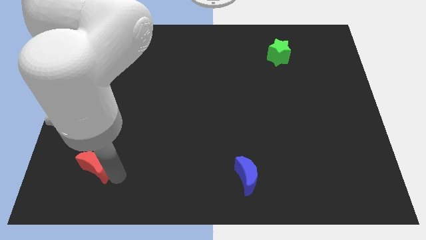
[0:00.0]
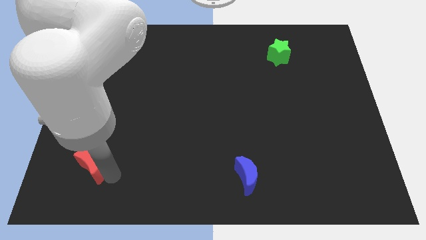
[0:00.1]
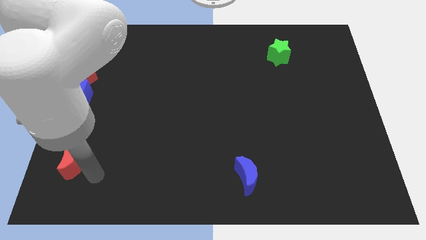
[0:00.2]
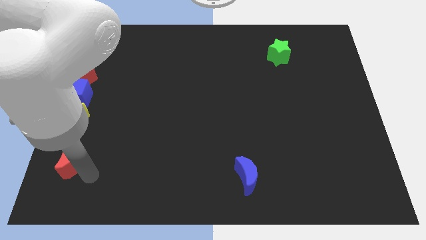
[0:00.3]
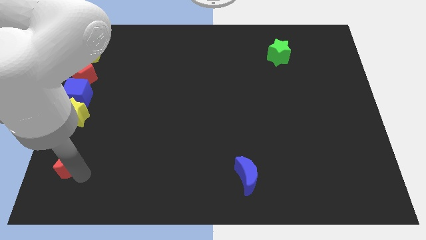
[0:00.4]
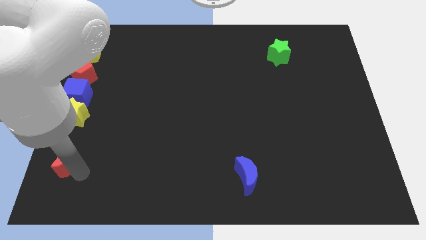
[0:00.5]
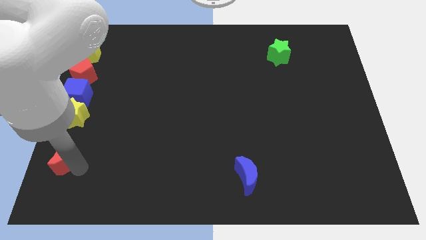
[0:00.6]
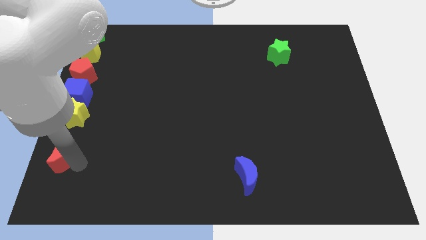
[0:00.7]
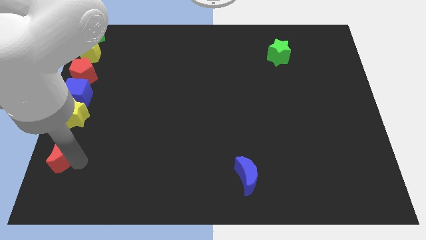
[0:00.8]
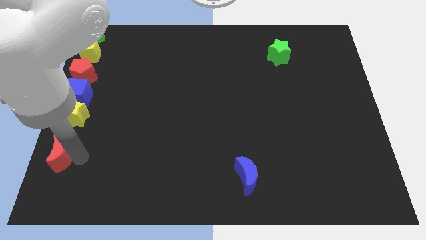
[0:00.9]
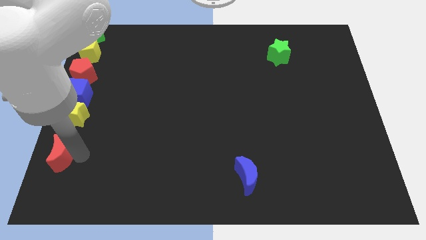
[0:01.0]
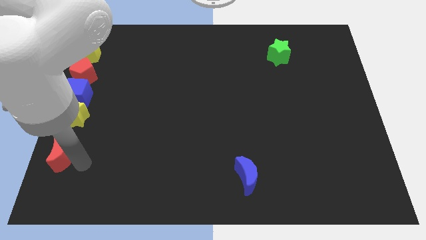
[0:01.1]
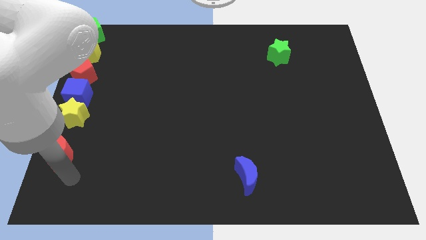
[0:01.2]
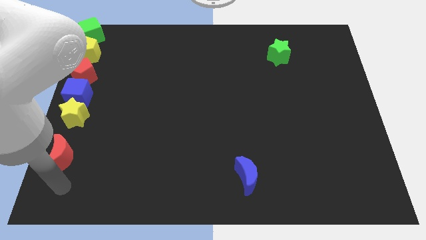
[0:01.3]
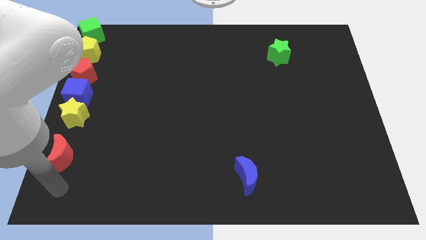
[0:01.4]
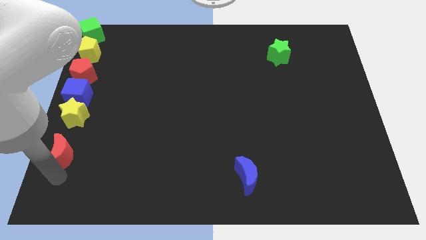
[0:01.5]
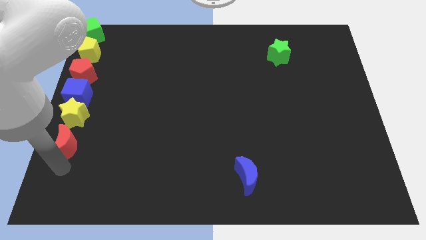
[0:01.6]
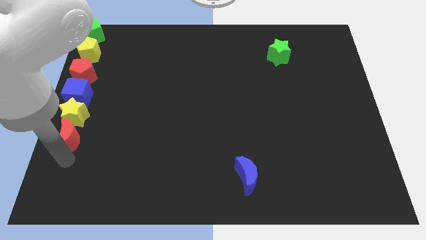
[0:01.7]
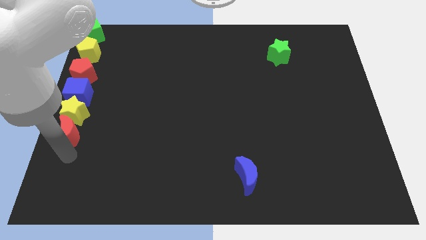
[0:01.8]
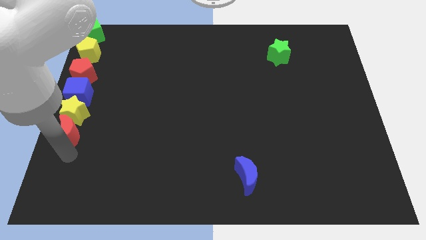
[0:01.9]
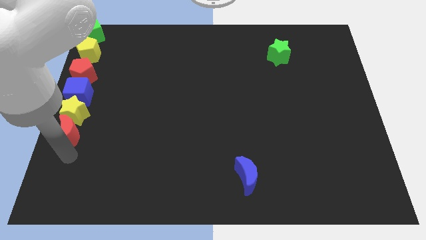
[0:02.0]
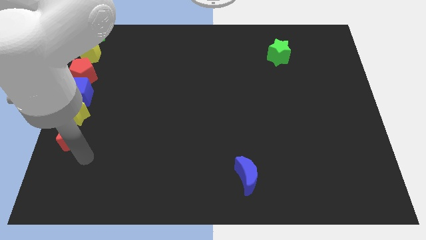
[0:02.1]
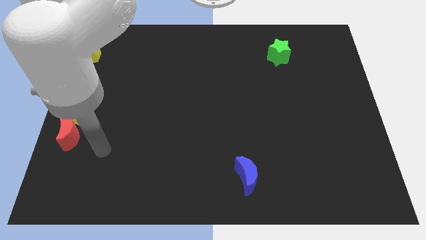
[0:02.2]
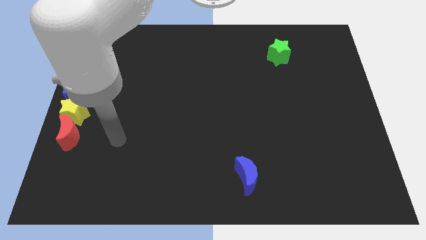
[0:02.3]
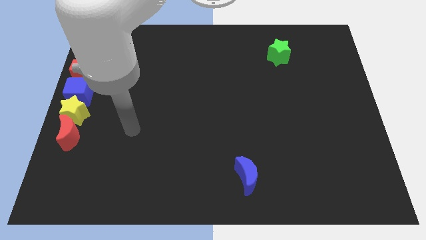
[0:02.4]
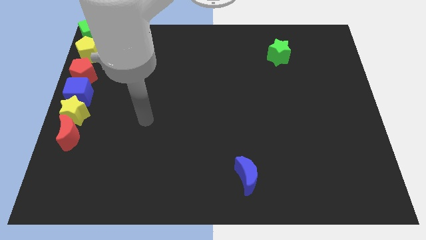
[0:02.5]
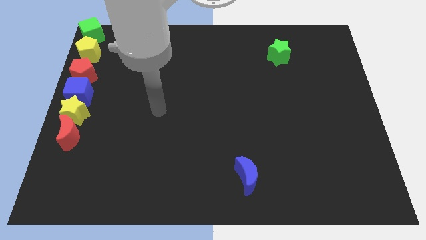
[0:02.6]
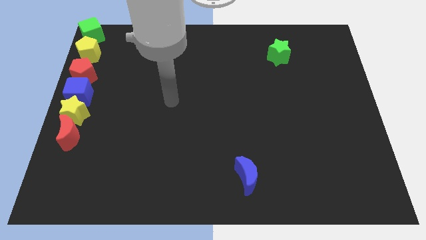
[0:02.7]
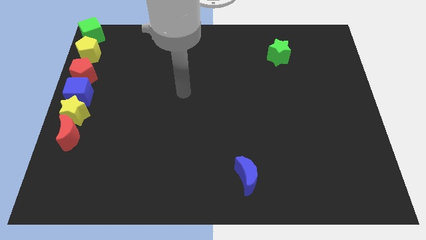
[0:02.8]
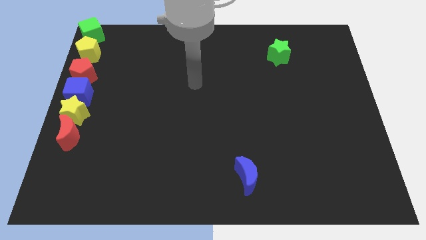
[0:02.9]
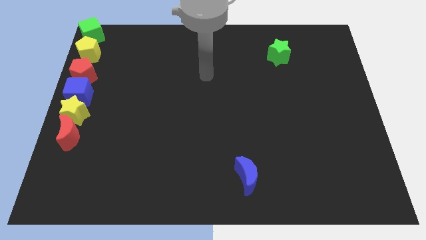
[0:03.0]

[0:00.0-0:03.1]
place red moon at the bottom of yellow star

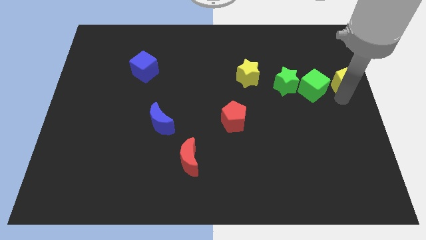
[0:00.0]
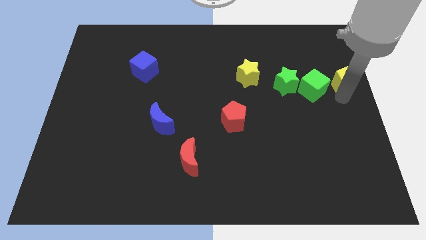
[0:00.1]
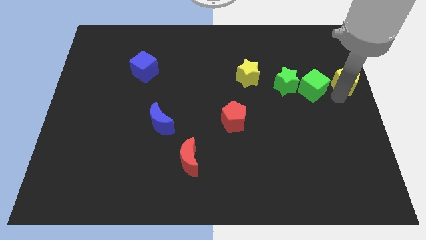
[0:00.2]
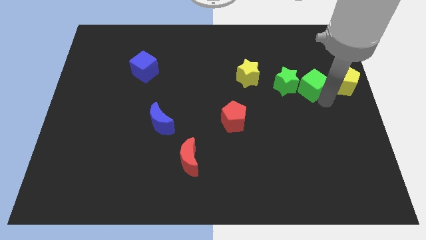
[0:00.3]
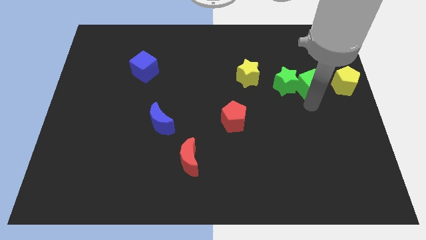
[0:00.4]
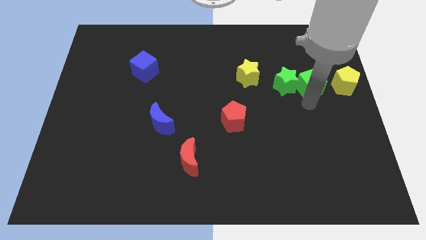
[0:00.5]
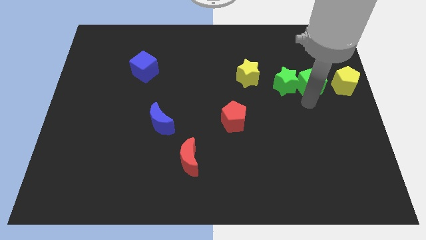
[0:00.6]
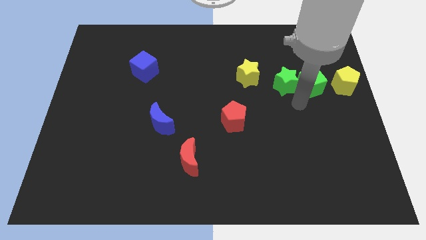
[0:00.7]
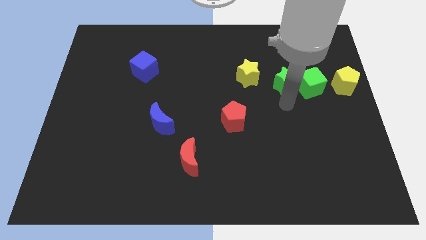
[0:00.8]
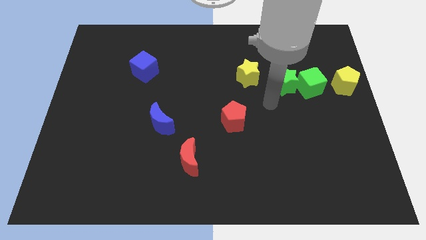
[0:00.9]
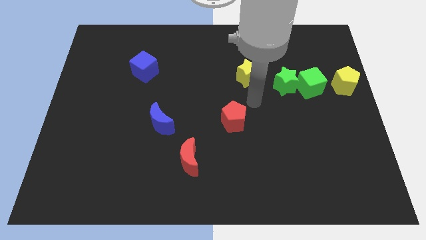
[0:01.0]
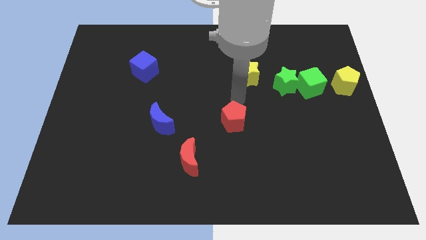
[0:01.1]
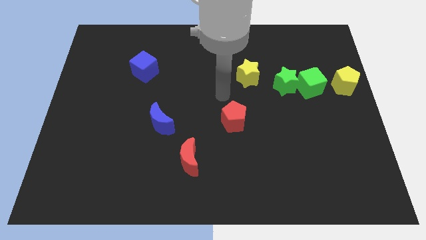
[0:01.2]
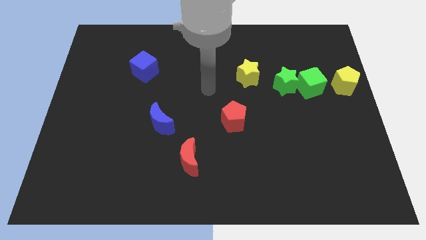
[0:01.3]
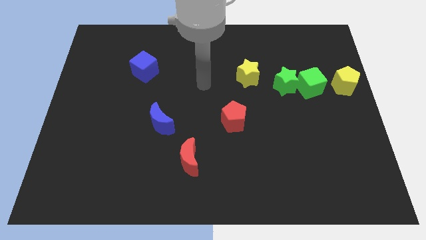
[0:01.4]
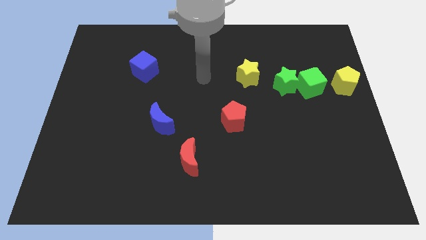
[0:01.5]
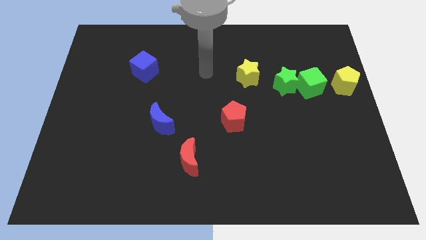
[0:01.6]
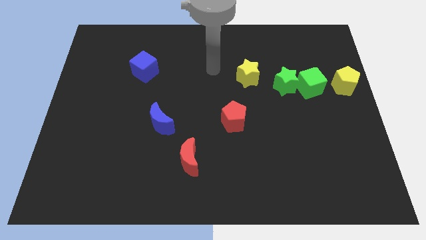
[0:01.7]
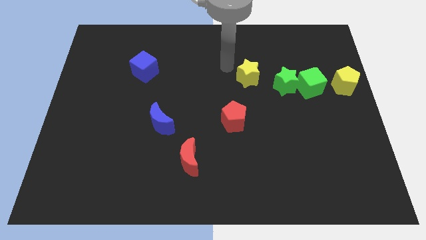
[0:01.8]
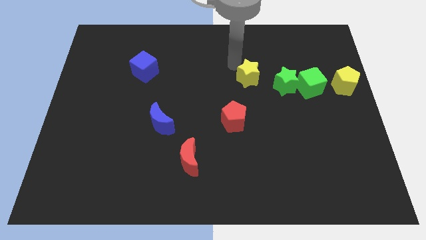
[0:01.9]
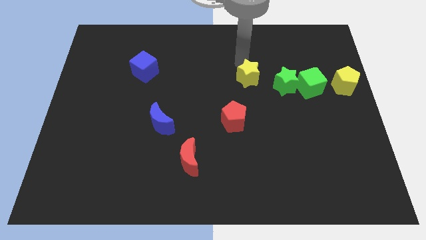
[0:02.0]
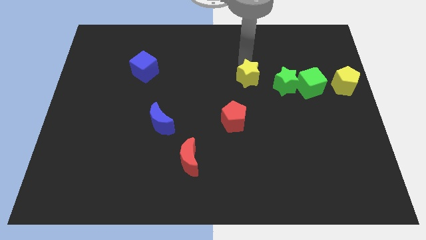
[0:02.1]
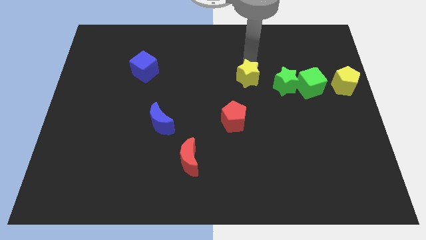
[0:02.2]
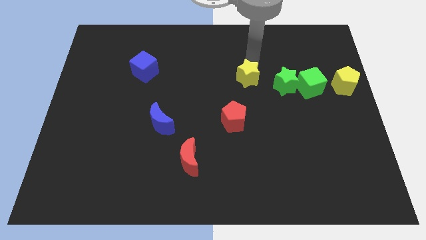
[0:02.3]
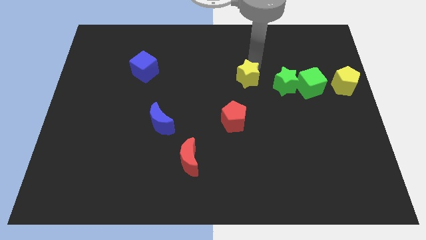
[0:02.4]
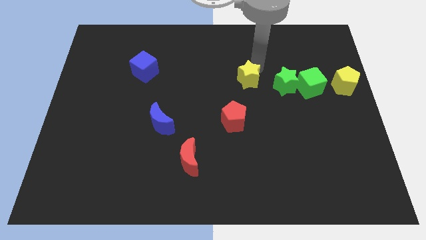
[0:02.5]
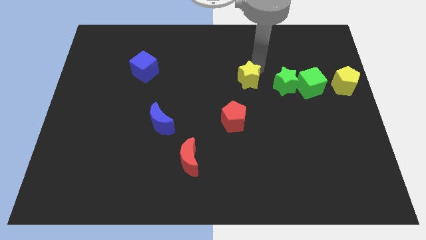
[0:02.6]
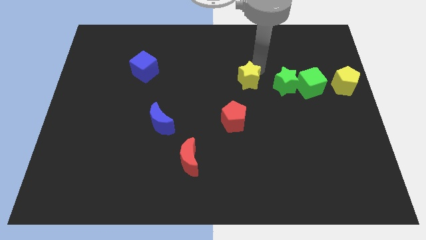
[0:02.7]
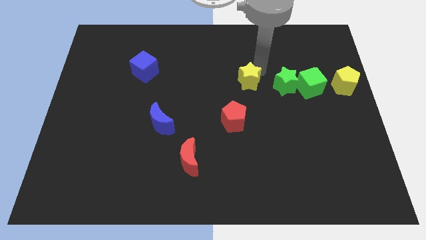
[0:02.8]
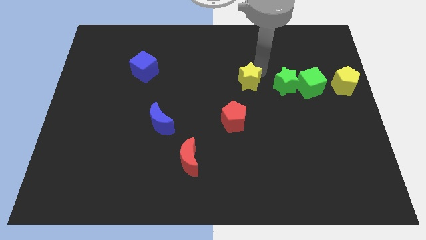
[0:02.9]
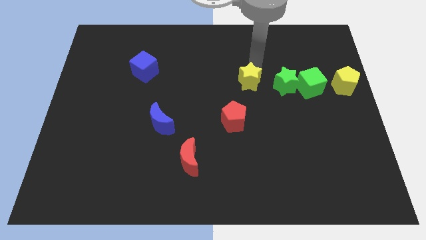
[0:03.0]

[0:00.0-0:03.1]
place the arm above the yellow star

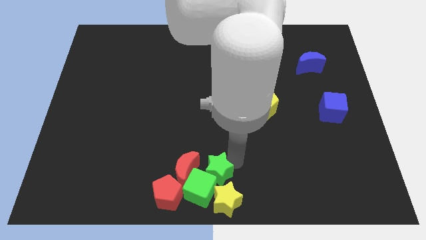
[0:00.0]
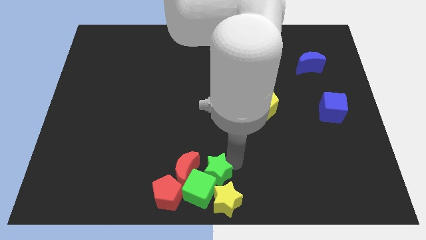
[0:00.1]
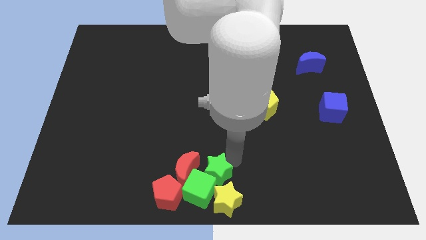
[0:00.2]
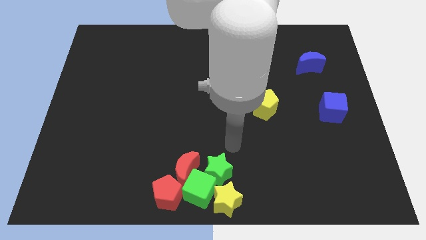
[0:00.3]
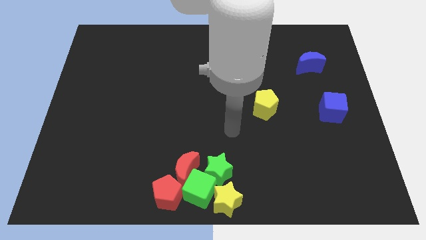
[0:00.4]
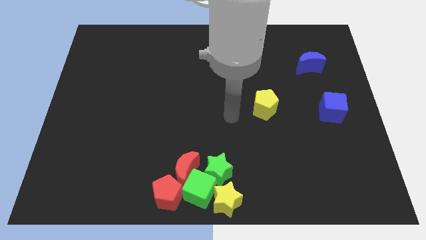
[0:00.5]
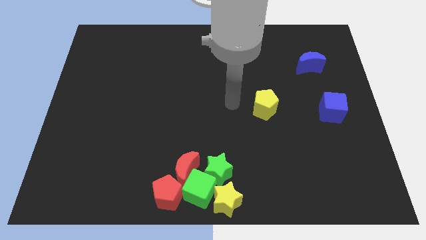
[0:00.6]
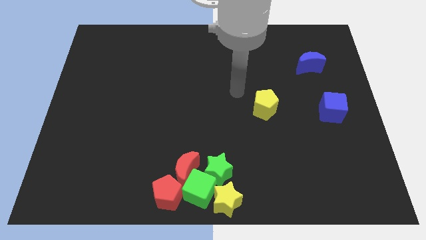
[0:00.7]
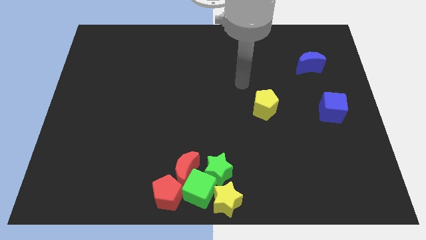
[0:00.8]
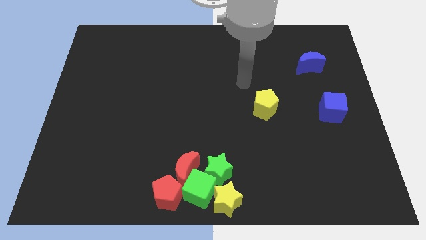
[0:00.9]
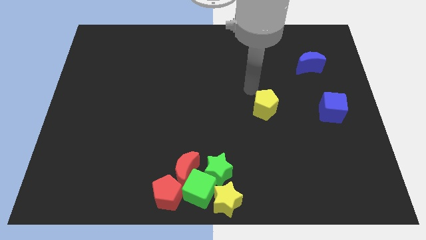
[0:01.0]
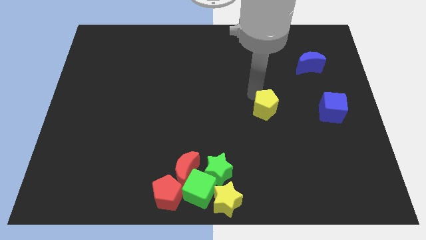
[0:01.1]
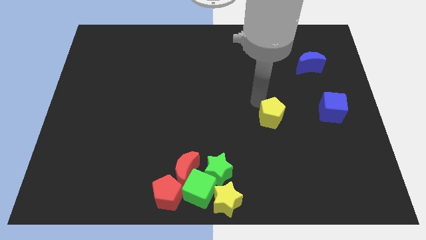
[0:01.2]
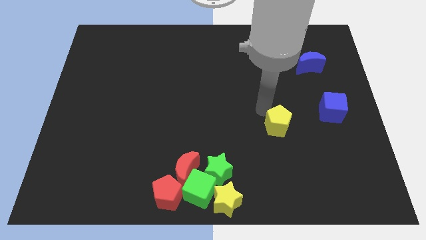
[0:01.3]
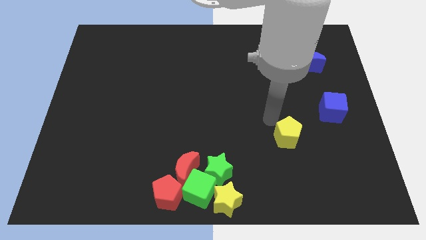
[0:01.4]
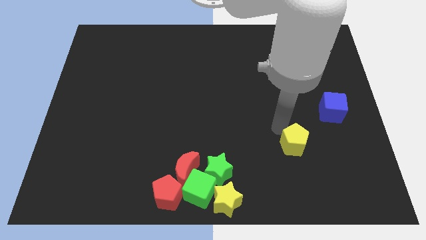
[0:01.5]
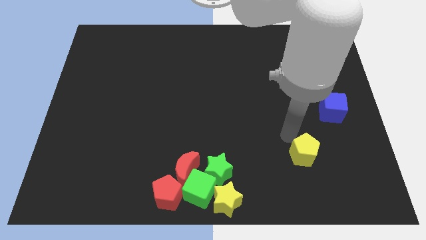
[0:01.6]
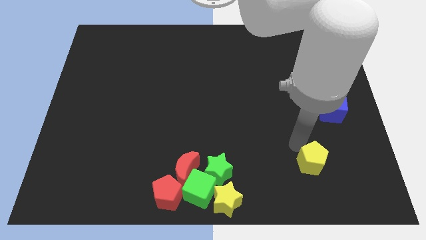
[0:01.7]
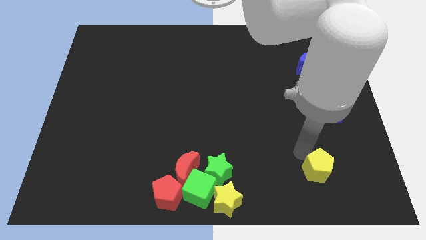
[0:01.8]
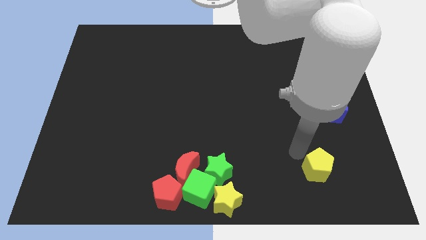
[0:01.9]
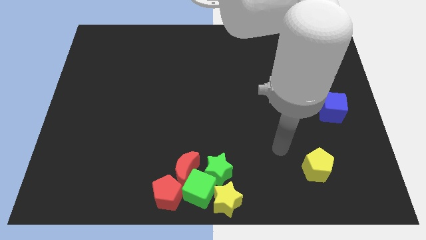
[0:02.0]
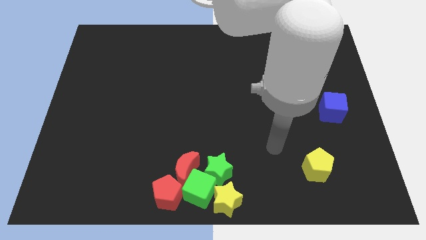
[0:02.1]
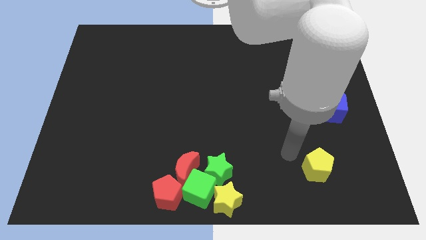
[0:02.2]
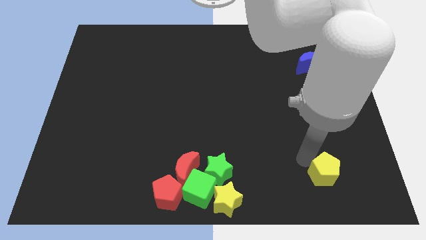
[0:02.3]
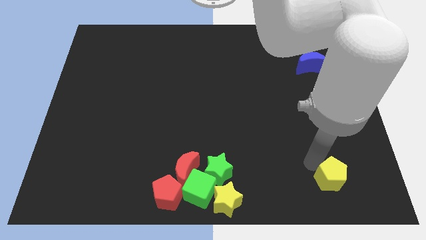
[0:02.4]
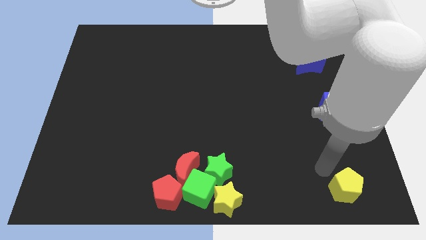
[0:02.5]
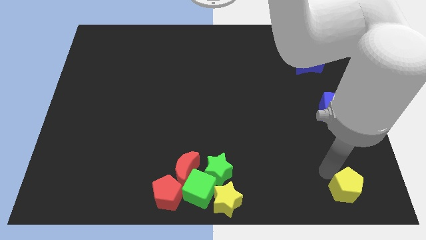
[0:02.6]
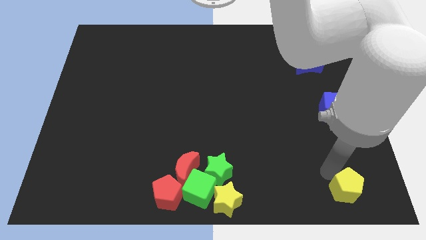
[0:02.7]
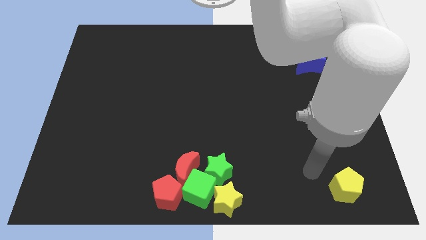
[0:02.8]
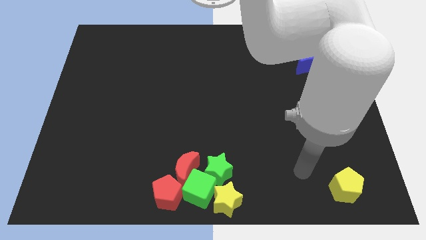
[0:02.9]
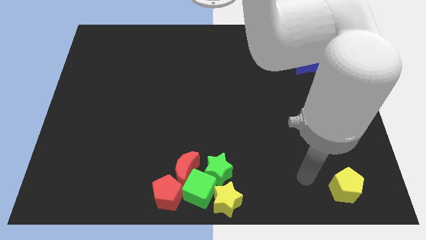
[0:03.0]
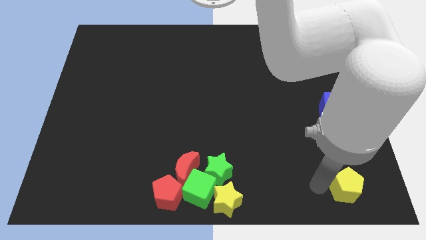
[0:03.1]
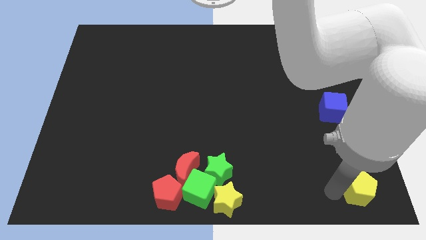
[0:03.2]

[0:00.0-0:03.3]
move the yellow pentagon to the bottom right
